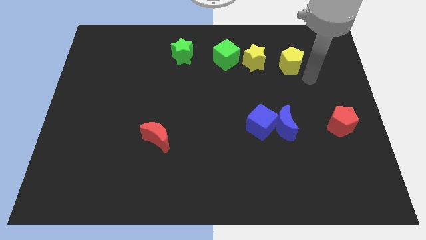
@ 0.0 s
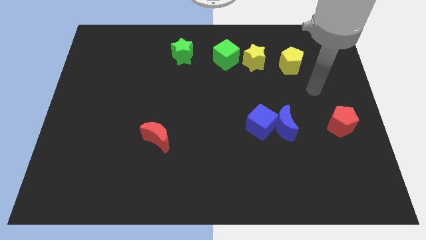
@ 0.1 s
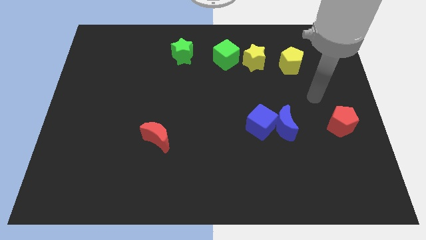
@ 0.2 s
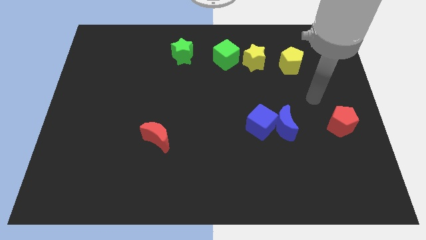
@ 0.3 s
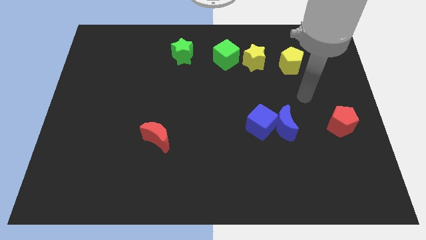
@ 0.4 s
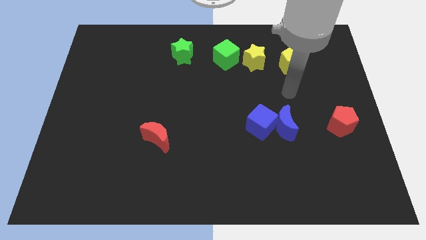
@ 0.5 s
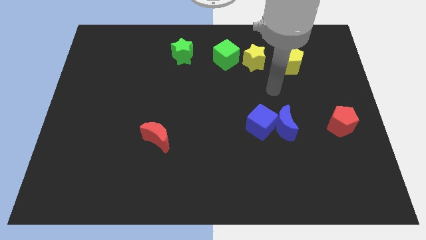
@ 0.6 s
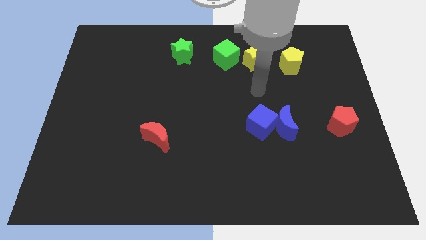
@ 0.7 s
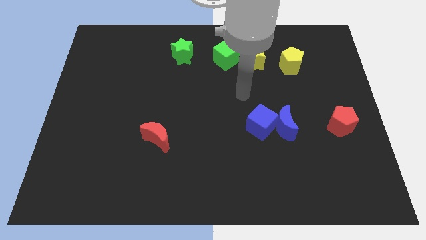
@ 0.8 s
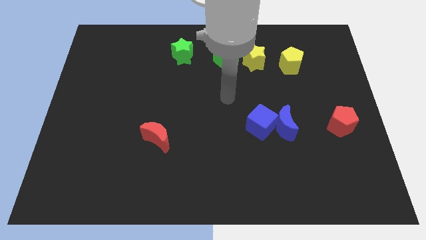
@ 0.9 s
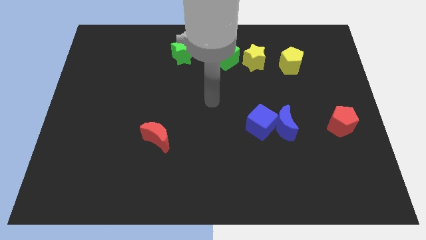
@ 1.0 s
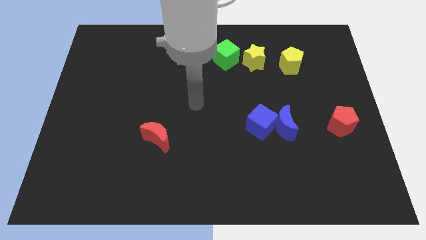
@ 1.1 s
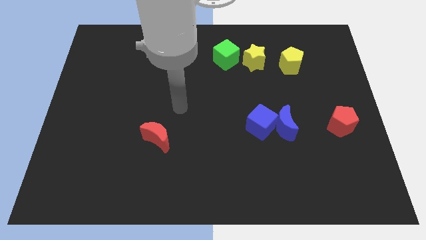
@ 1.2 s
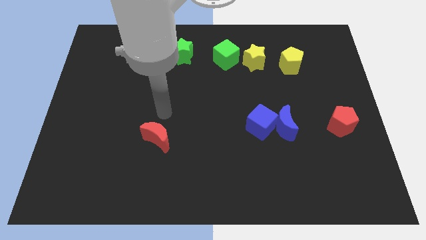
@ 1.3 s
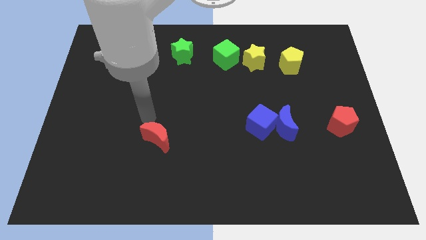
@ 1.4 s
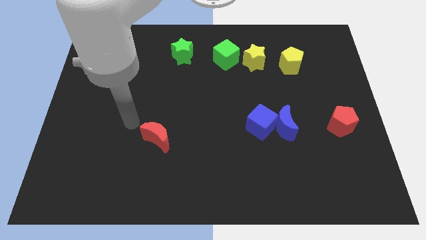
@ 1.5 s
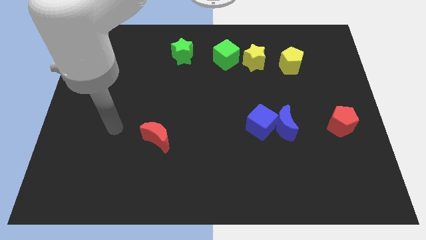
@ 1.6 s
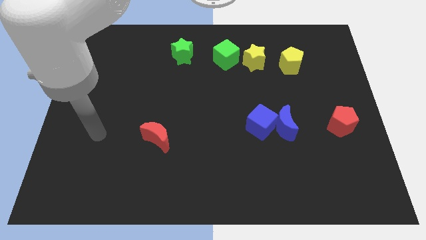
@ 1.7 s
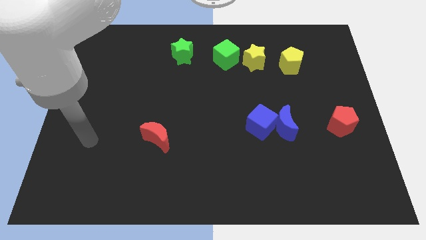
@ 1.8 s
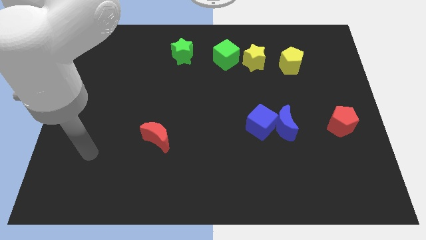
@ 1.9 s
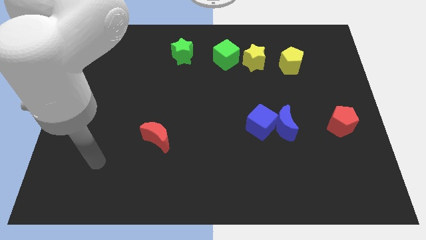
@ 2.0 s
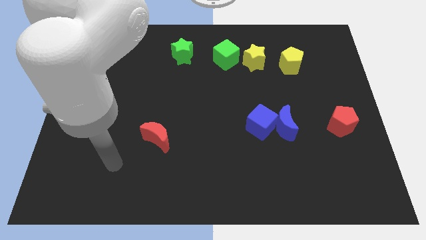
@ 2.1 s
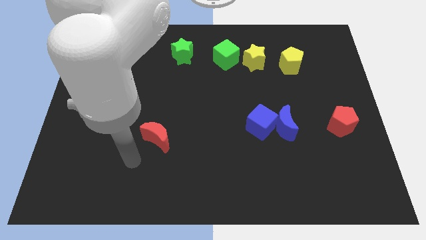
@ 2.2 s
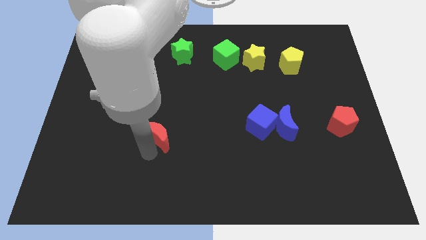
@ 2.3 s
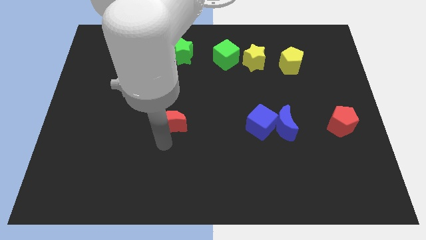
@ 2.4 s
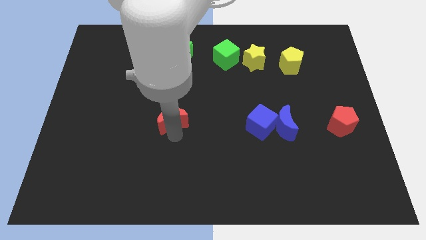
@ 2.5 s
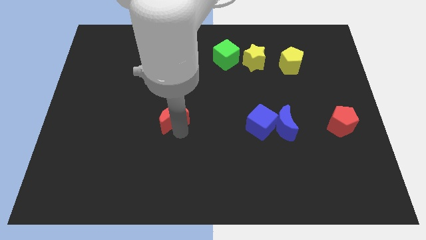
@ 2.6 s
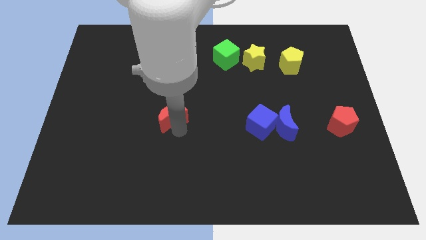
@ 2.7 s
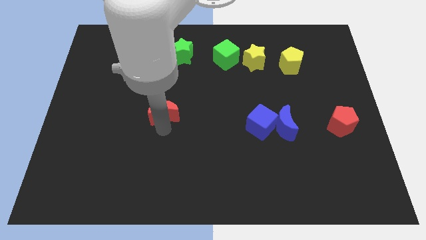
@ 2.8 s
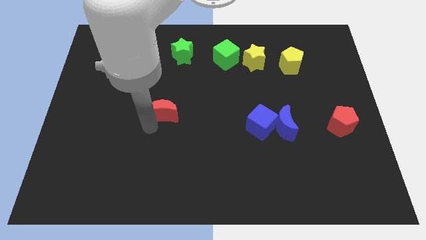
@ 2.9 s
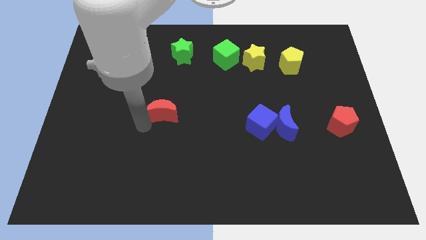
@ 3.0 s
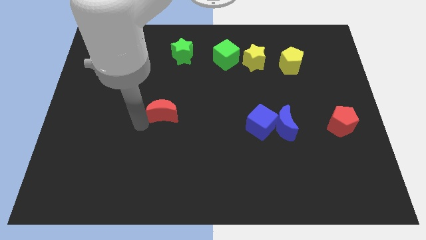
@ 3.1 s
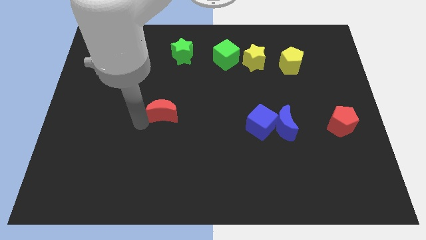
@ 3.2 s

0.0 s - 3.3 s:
move the red crescent horizontally to the left side of the blue cube

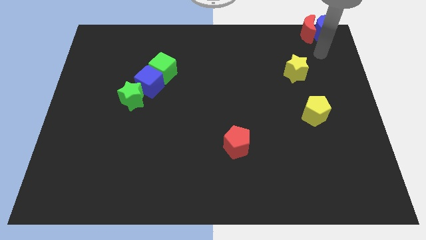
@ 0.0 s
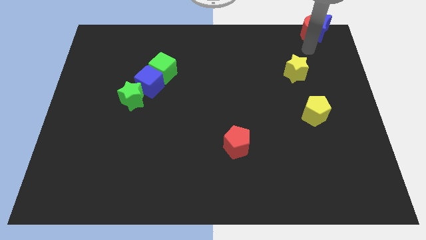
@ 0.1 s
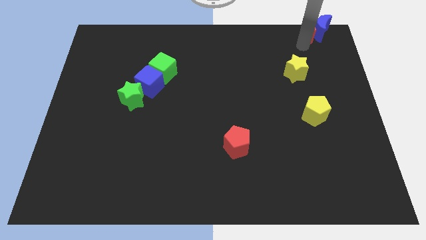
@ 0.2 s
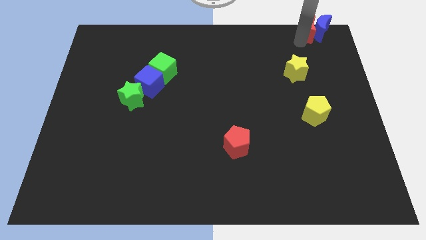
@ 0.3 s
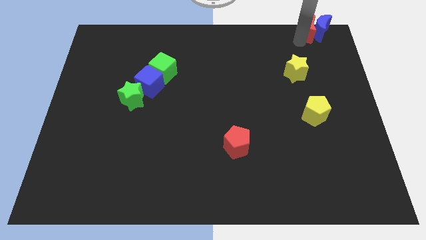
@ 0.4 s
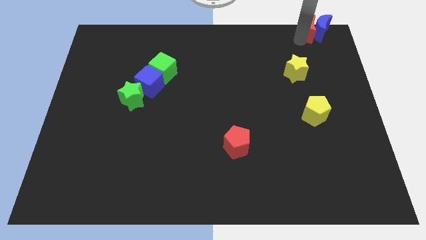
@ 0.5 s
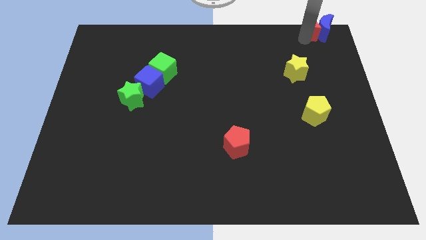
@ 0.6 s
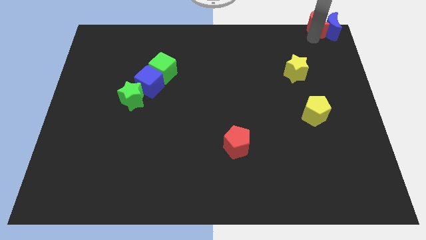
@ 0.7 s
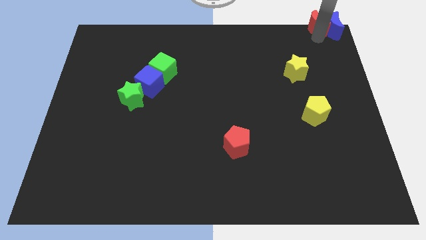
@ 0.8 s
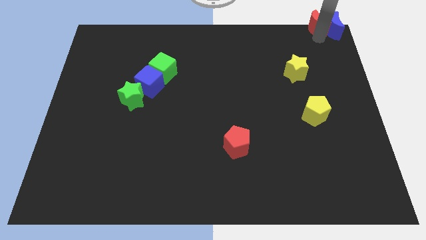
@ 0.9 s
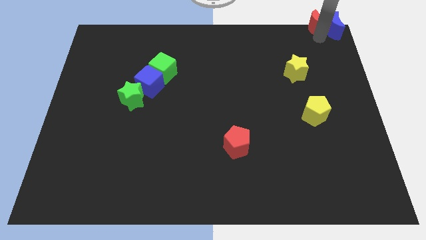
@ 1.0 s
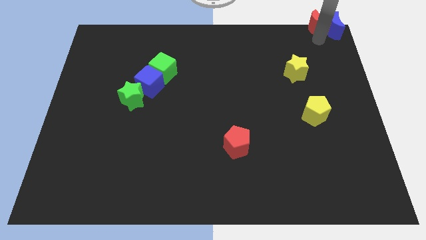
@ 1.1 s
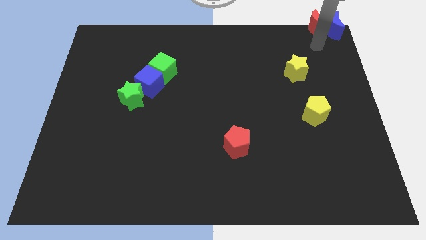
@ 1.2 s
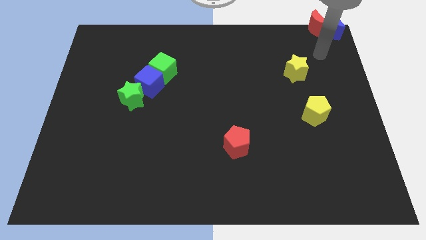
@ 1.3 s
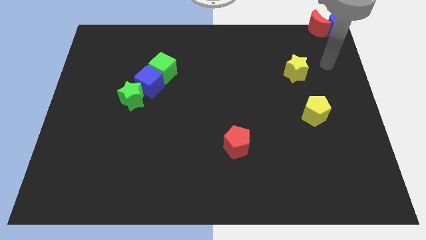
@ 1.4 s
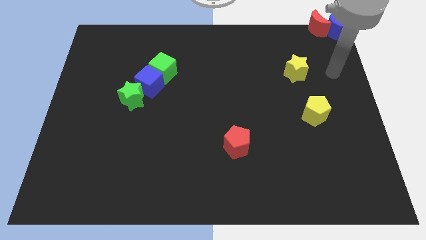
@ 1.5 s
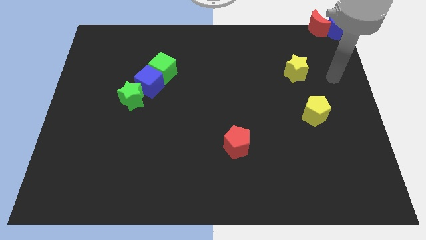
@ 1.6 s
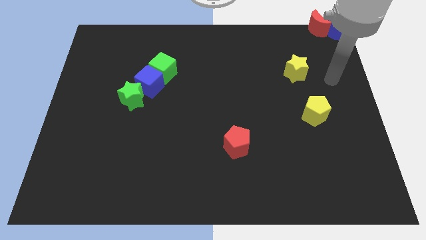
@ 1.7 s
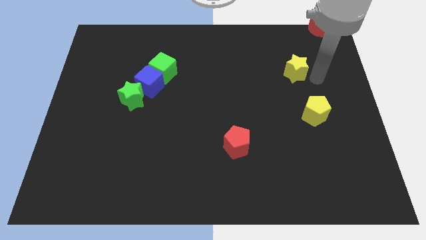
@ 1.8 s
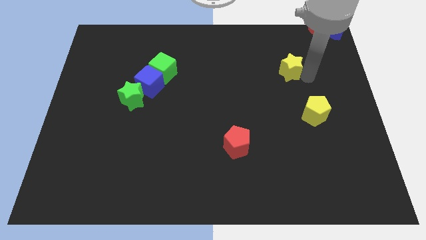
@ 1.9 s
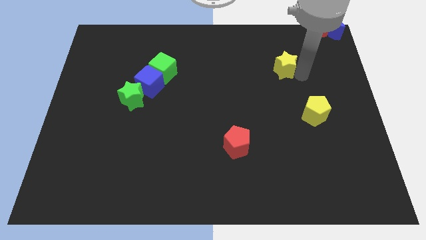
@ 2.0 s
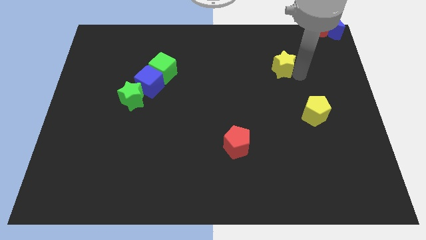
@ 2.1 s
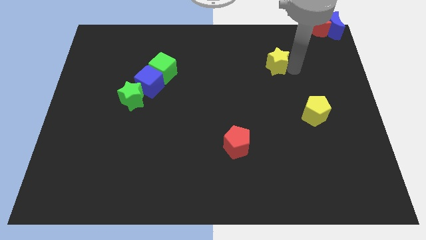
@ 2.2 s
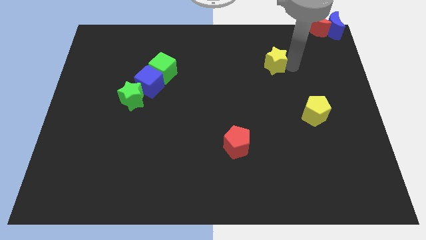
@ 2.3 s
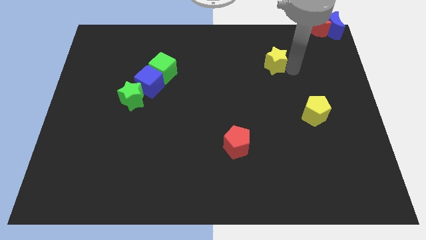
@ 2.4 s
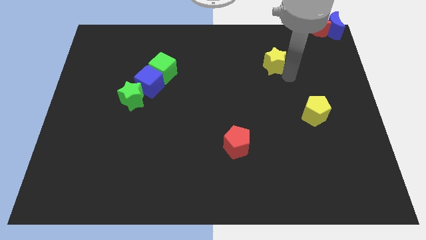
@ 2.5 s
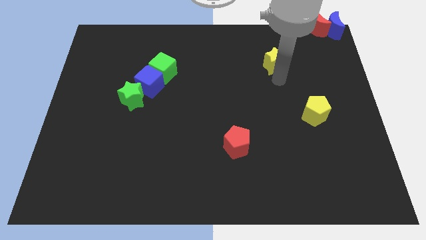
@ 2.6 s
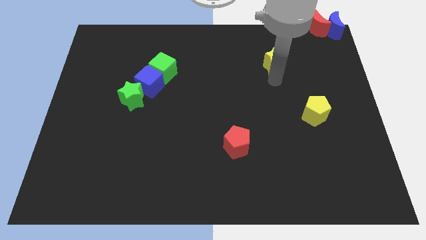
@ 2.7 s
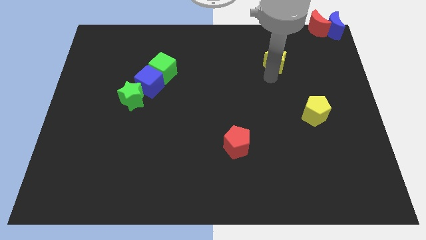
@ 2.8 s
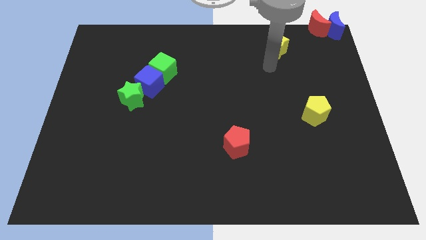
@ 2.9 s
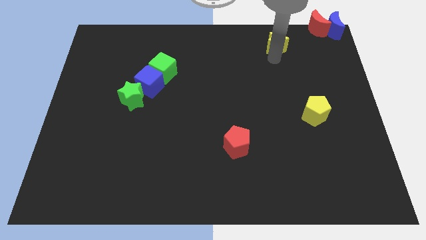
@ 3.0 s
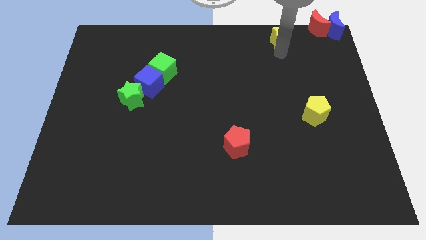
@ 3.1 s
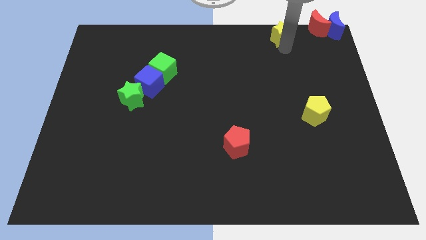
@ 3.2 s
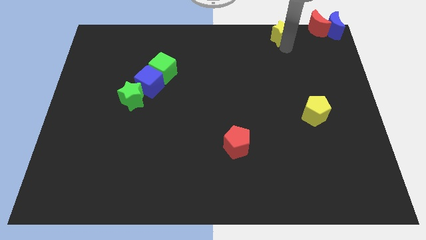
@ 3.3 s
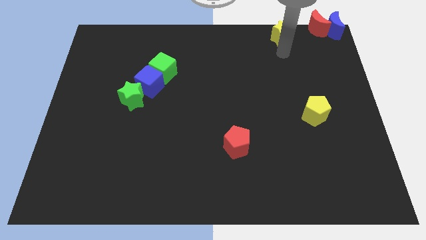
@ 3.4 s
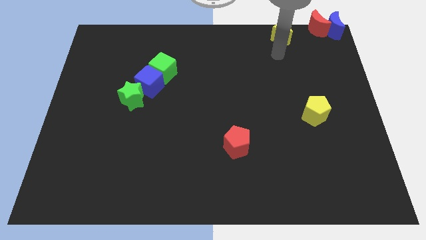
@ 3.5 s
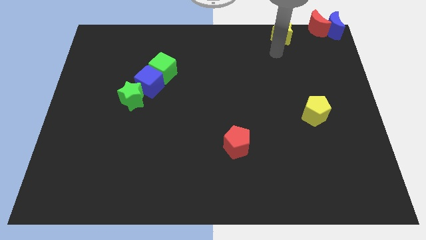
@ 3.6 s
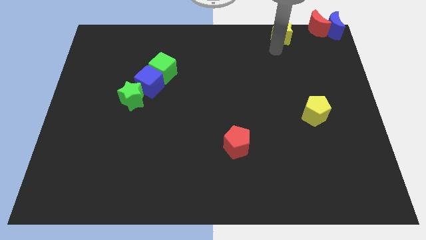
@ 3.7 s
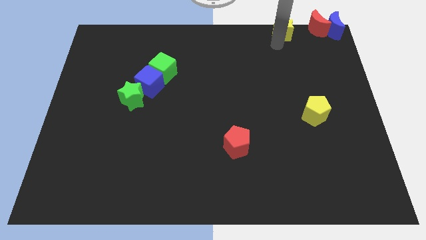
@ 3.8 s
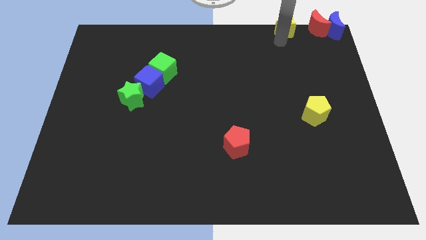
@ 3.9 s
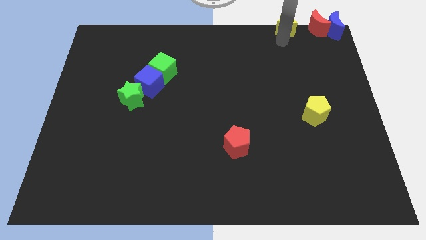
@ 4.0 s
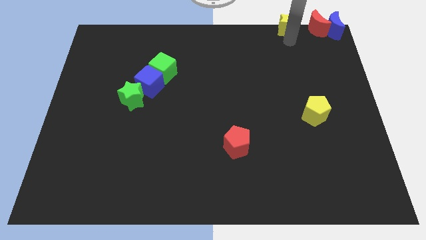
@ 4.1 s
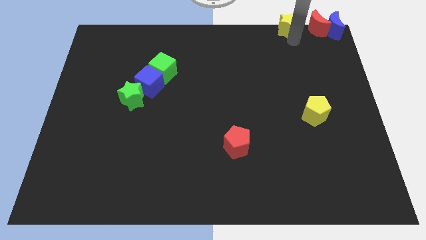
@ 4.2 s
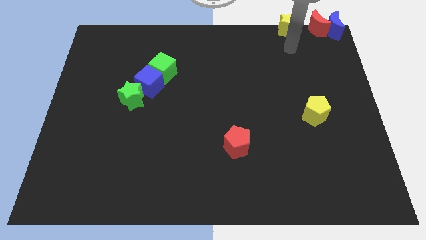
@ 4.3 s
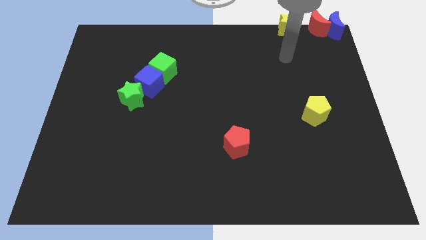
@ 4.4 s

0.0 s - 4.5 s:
place the group of crescents and yellow star in a horizontal line at the top right of the board

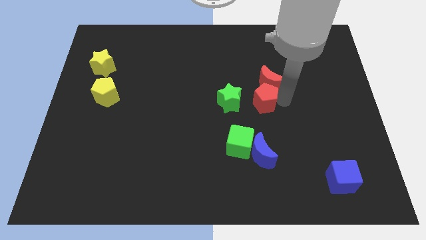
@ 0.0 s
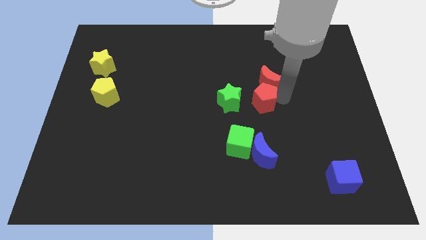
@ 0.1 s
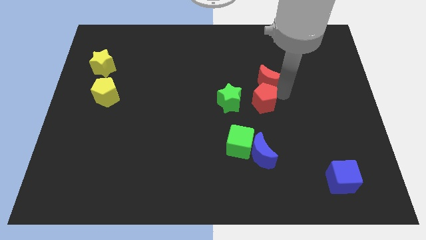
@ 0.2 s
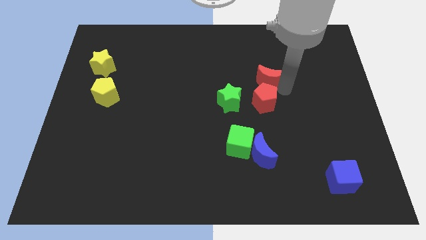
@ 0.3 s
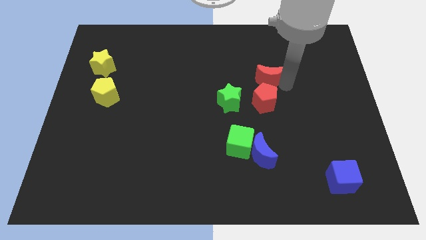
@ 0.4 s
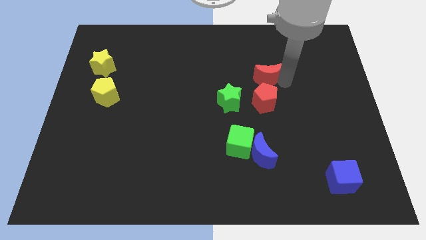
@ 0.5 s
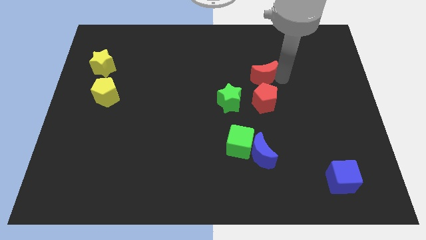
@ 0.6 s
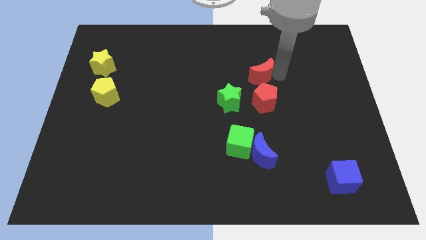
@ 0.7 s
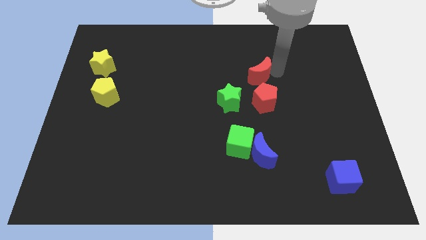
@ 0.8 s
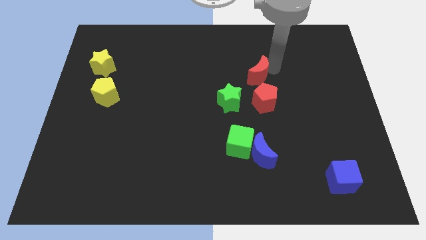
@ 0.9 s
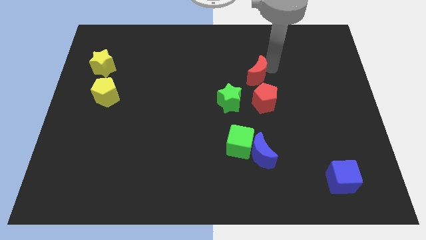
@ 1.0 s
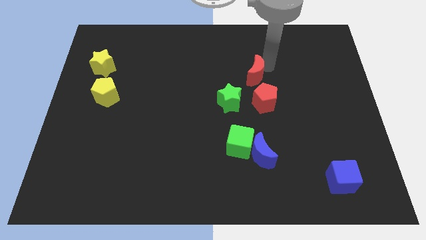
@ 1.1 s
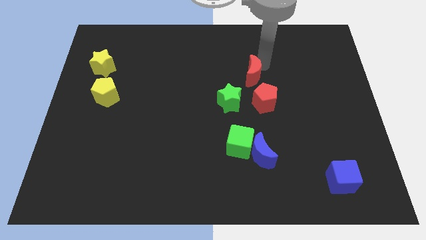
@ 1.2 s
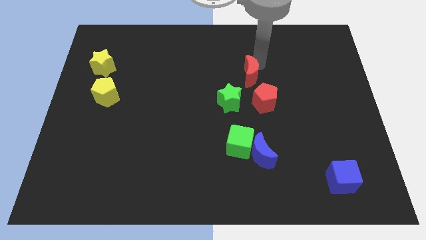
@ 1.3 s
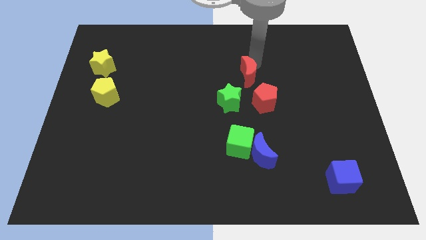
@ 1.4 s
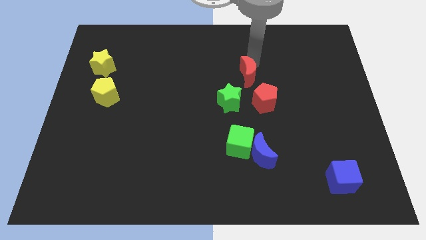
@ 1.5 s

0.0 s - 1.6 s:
move the red moon at the center top of the green star and red pentagon
